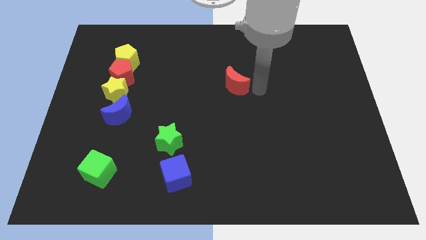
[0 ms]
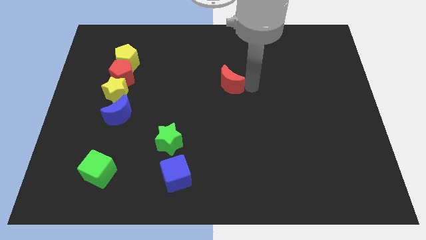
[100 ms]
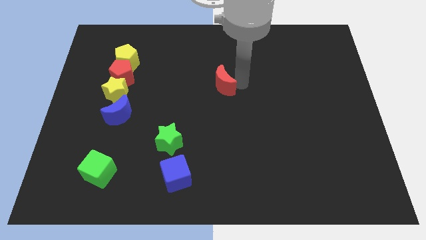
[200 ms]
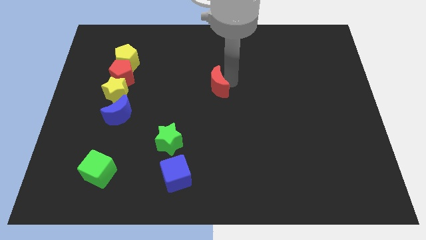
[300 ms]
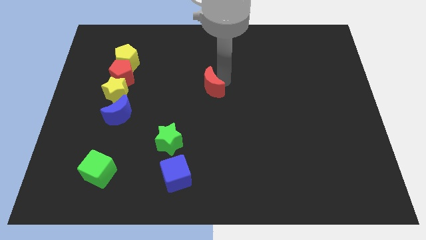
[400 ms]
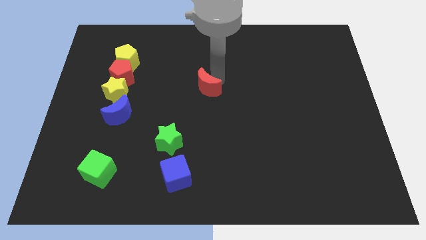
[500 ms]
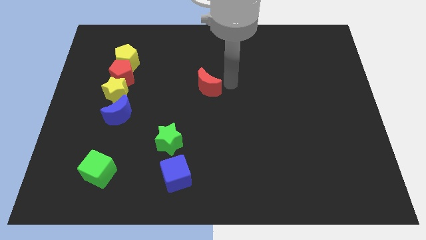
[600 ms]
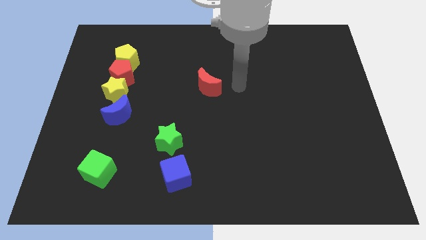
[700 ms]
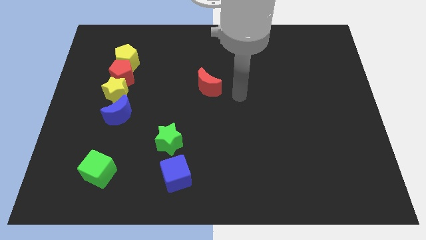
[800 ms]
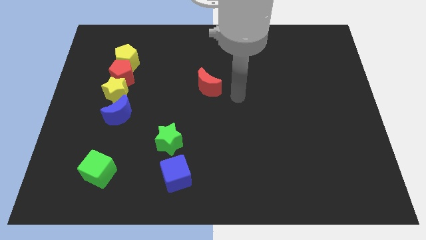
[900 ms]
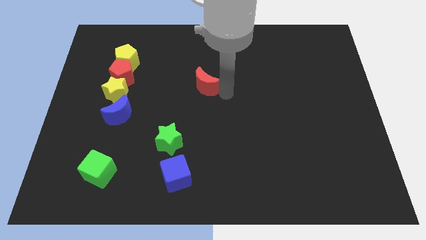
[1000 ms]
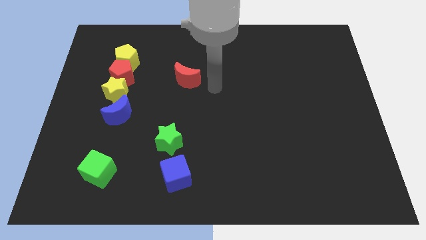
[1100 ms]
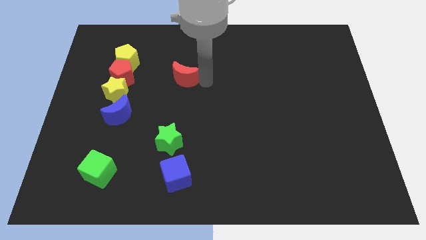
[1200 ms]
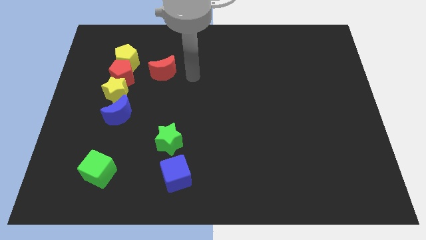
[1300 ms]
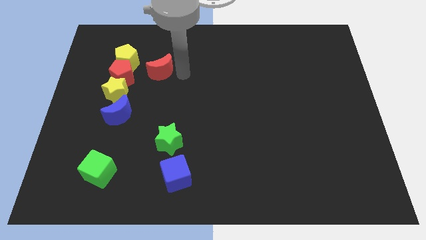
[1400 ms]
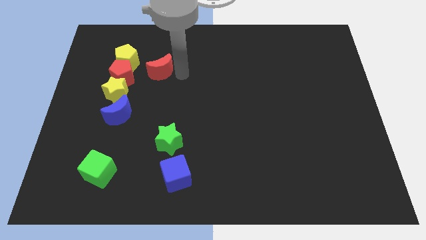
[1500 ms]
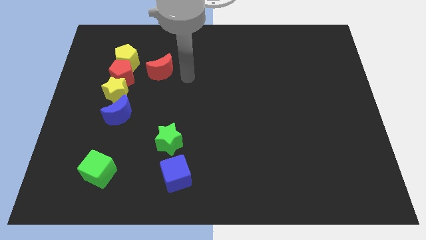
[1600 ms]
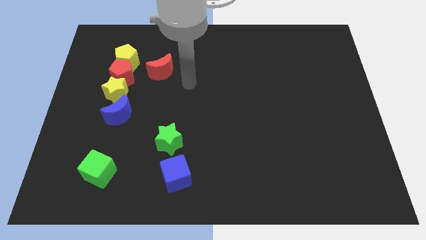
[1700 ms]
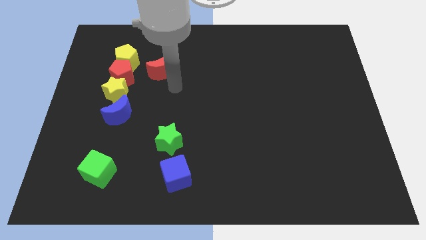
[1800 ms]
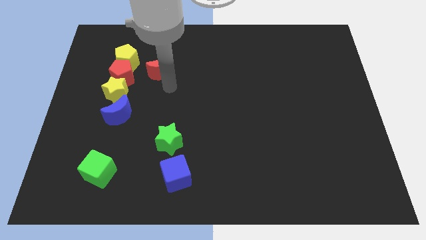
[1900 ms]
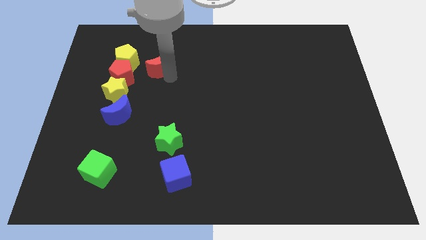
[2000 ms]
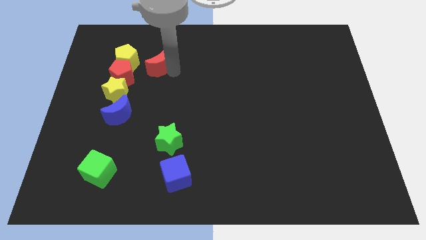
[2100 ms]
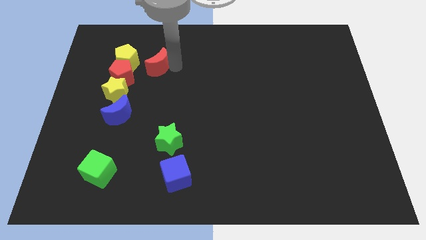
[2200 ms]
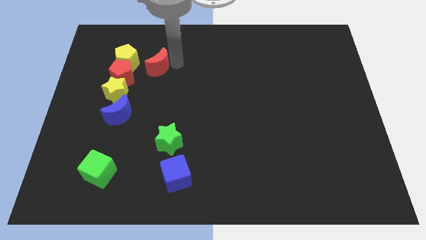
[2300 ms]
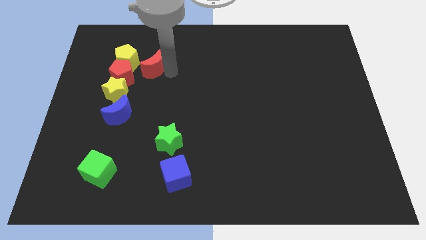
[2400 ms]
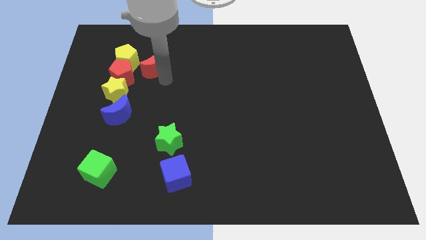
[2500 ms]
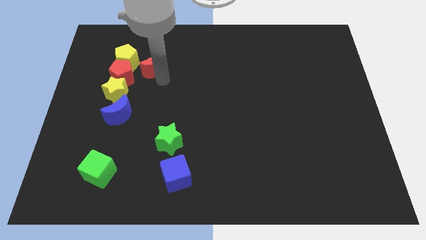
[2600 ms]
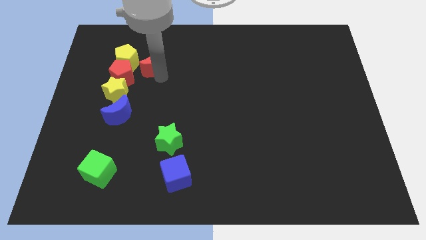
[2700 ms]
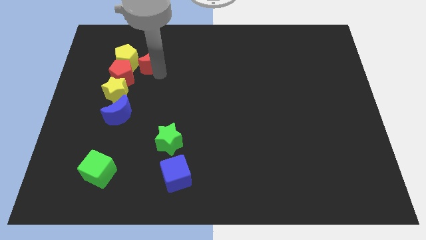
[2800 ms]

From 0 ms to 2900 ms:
push the red crescent right to the yellow pentagon

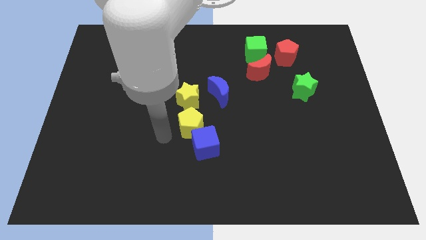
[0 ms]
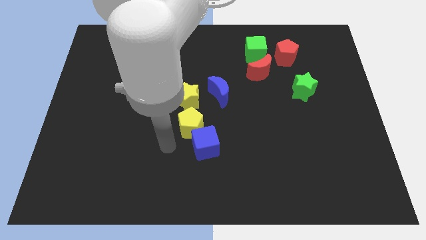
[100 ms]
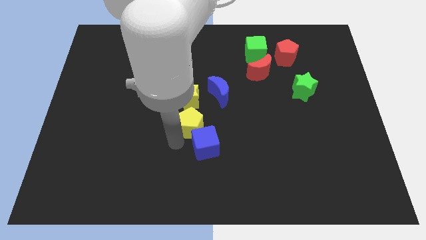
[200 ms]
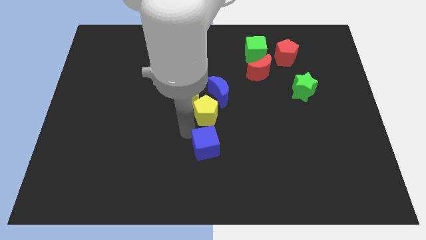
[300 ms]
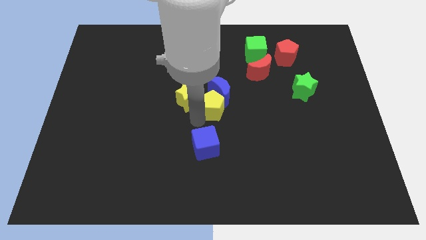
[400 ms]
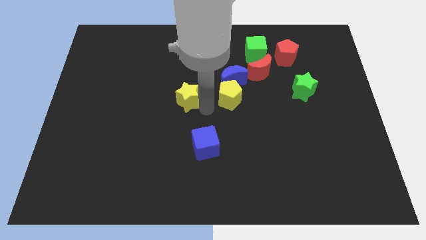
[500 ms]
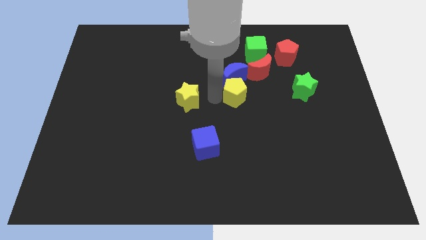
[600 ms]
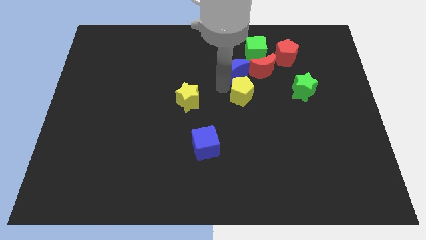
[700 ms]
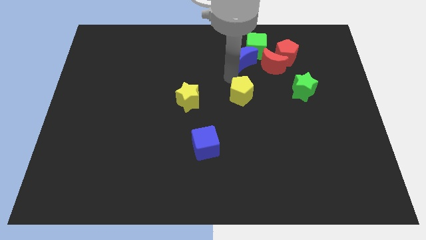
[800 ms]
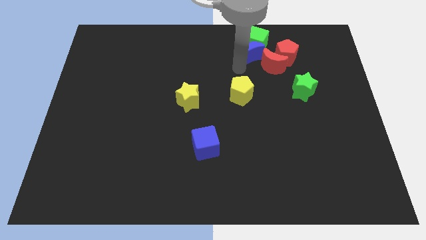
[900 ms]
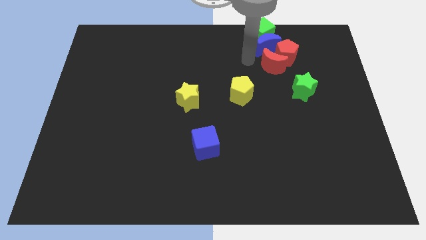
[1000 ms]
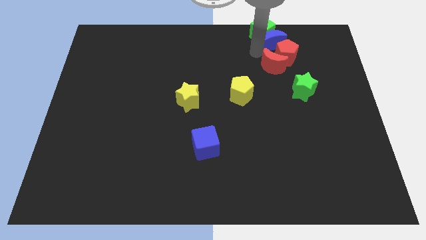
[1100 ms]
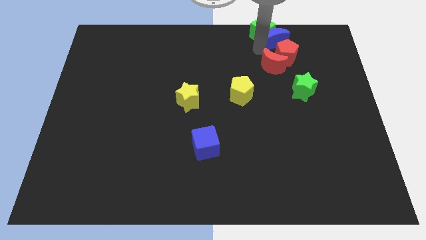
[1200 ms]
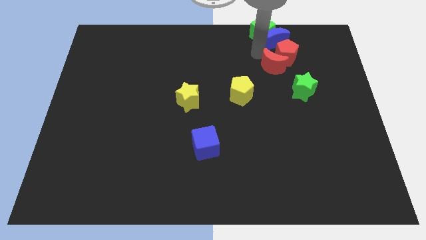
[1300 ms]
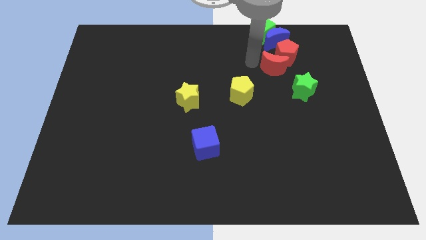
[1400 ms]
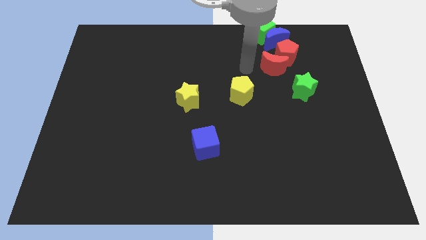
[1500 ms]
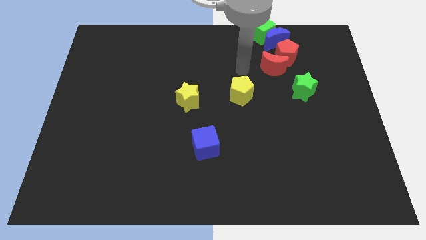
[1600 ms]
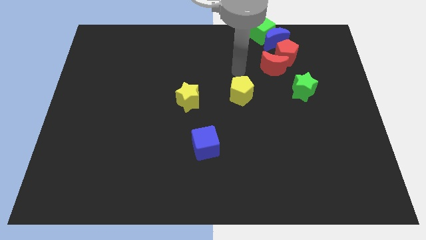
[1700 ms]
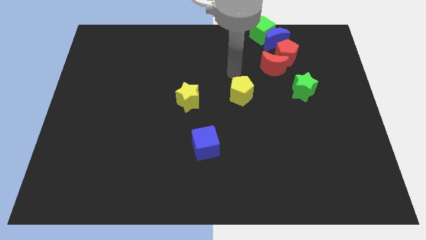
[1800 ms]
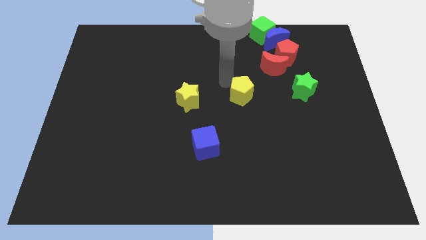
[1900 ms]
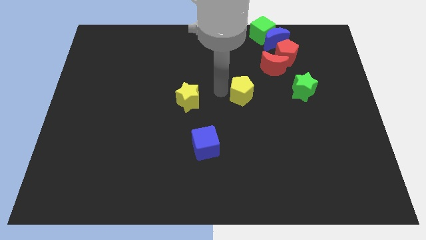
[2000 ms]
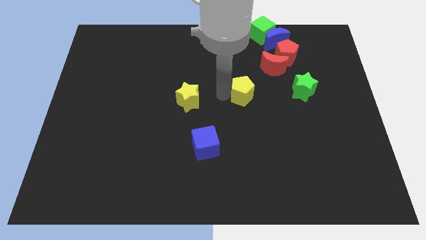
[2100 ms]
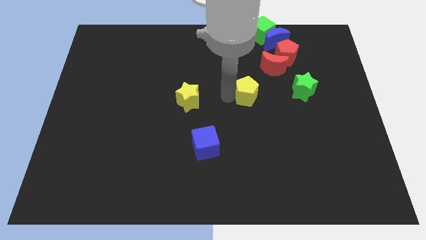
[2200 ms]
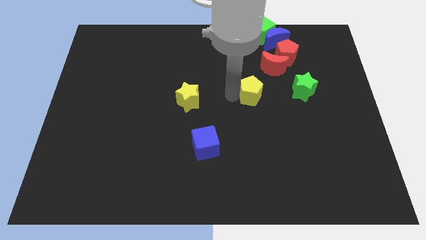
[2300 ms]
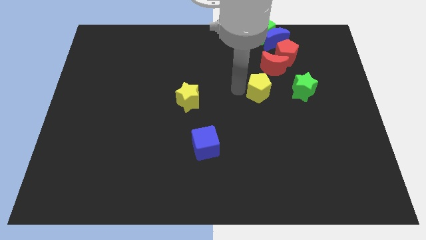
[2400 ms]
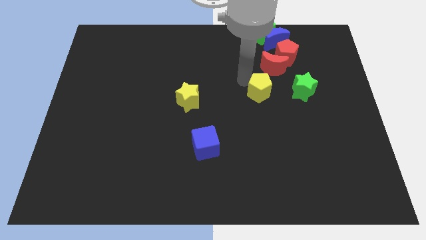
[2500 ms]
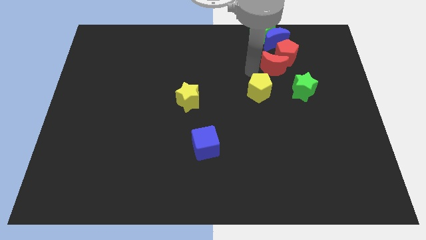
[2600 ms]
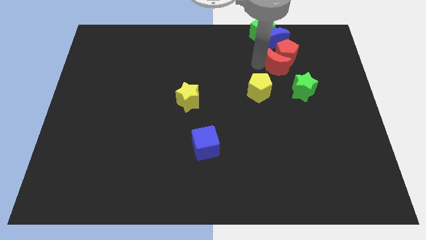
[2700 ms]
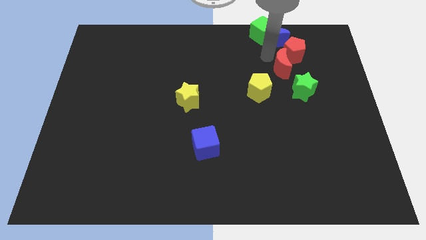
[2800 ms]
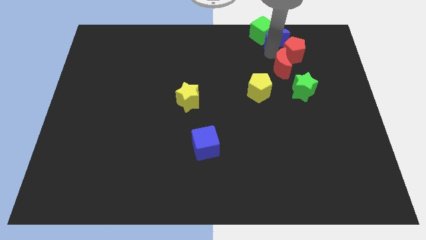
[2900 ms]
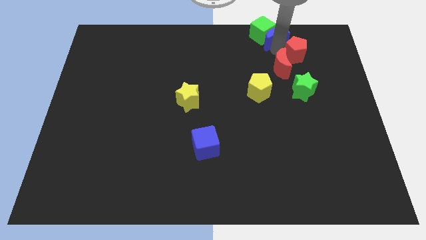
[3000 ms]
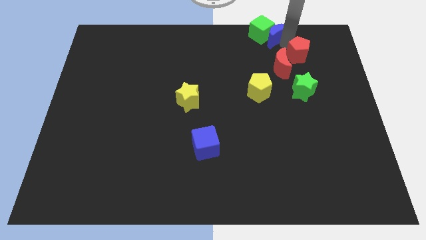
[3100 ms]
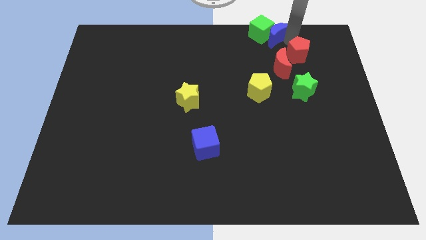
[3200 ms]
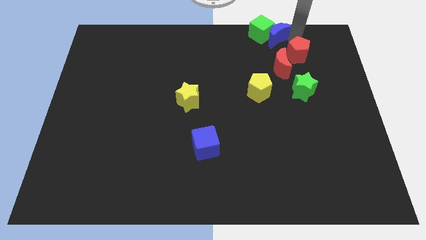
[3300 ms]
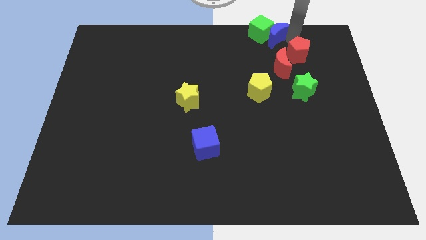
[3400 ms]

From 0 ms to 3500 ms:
move the yellow pentagon to the left of the green star

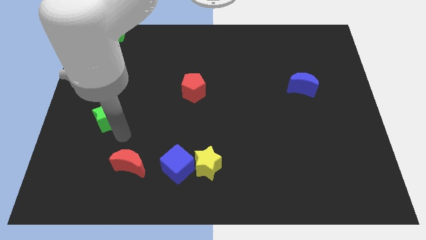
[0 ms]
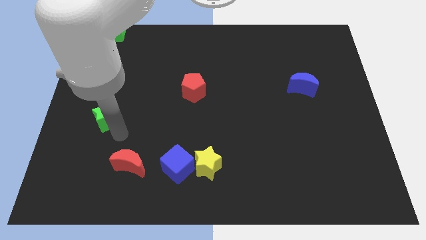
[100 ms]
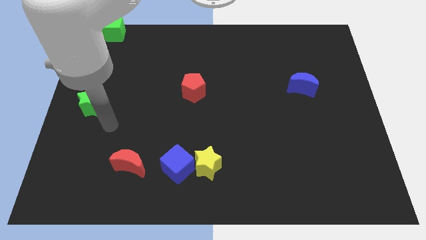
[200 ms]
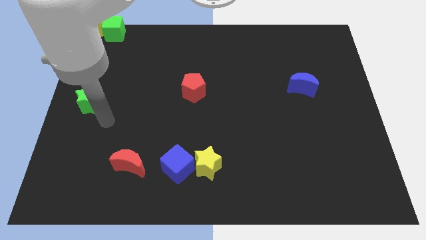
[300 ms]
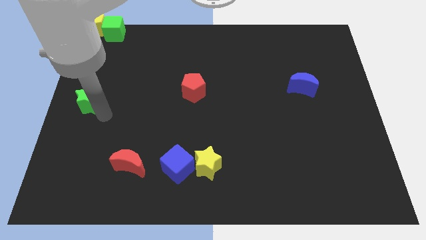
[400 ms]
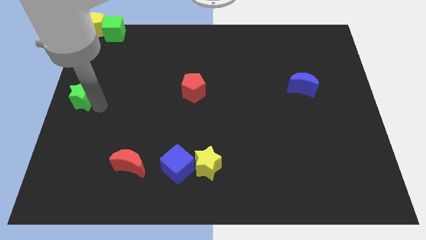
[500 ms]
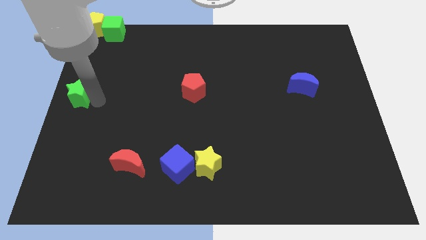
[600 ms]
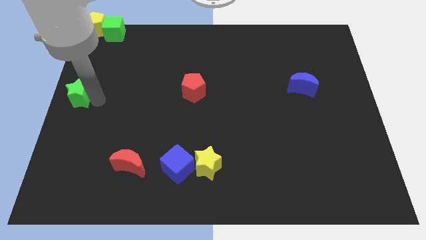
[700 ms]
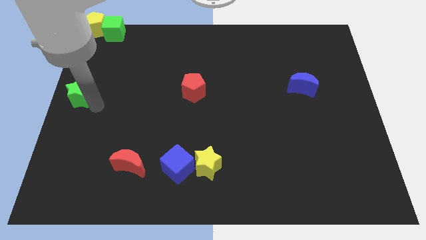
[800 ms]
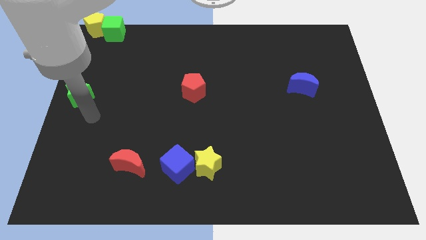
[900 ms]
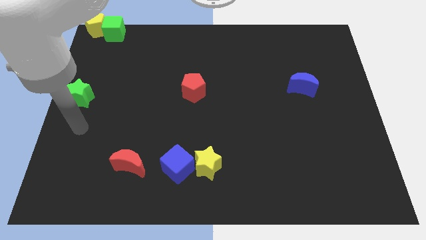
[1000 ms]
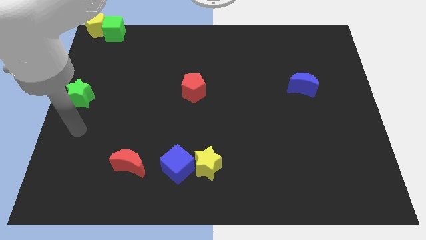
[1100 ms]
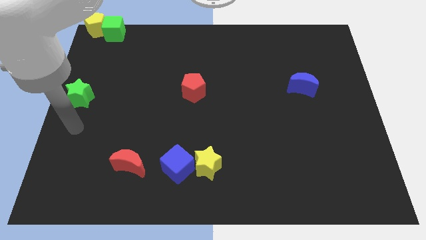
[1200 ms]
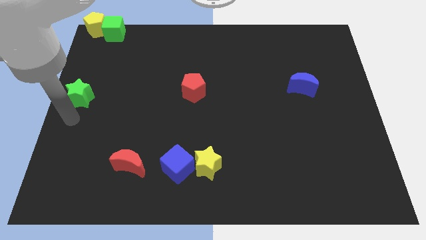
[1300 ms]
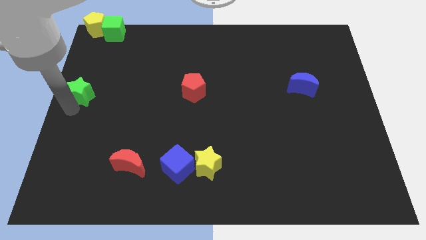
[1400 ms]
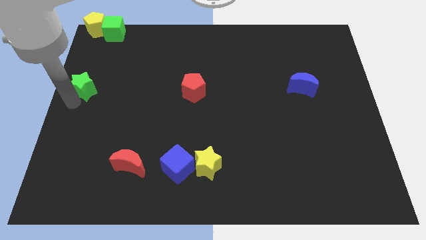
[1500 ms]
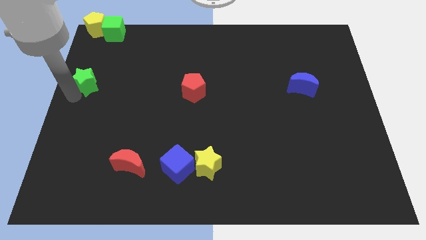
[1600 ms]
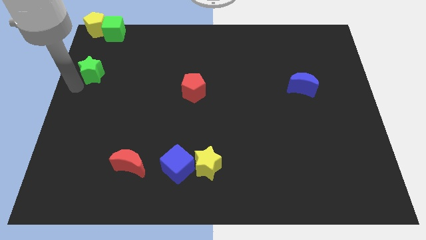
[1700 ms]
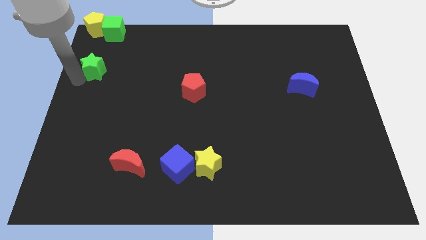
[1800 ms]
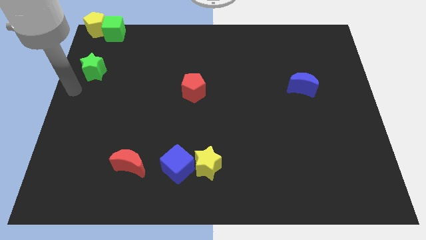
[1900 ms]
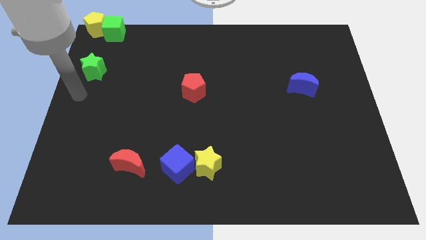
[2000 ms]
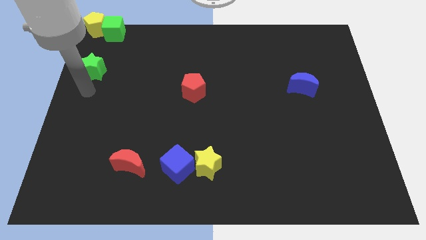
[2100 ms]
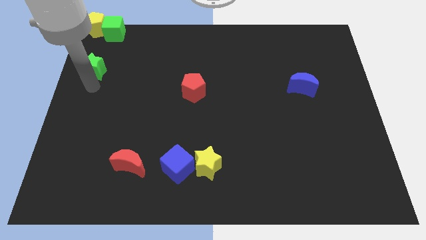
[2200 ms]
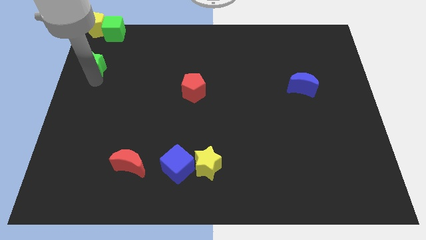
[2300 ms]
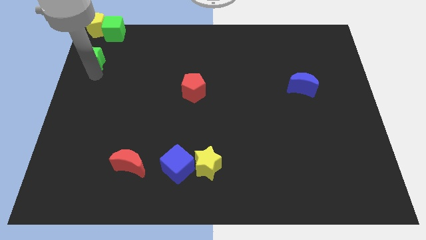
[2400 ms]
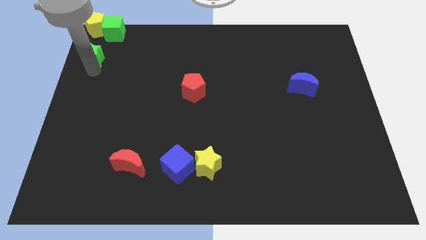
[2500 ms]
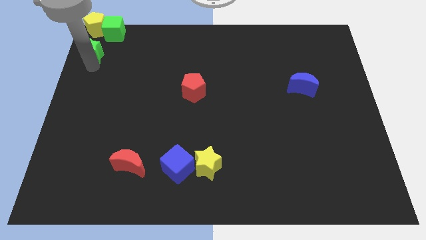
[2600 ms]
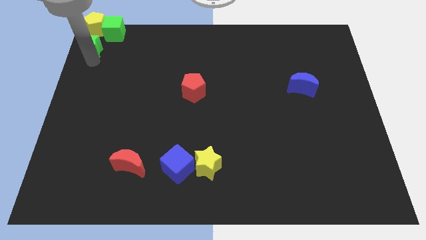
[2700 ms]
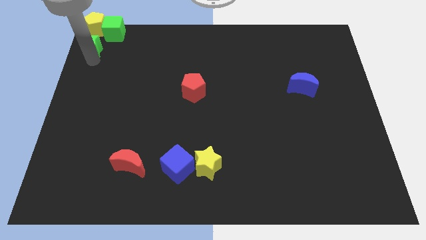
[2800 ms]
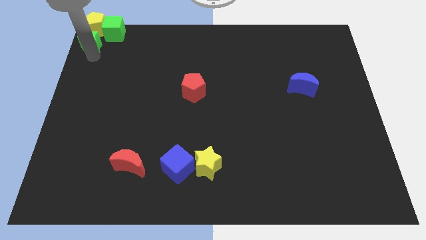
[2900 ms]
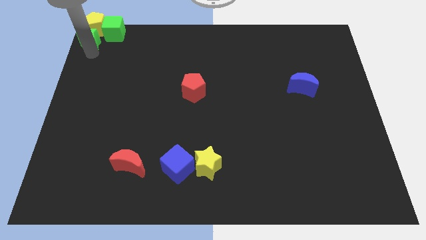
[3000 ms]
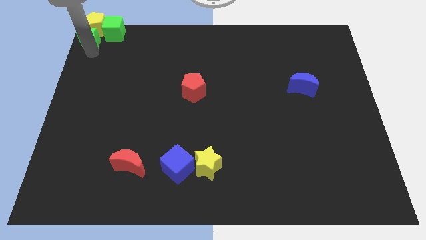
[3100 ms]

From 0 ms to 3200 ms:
put the green star below the yellow pentagon
